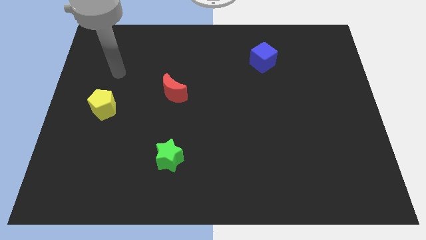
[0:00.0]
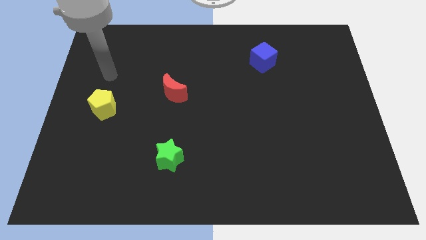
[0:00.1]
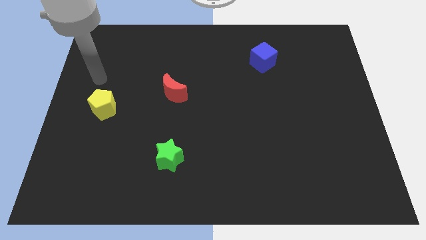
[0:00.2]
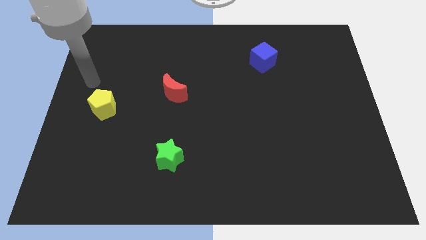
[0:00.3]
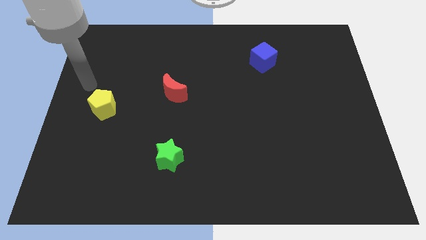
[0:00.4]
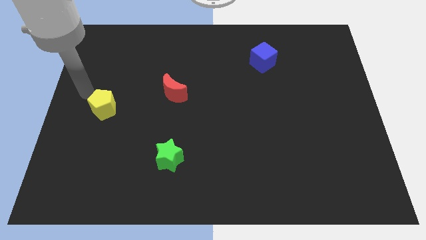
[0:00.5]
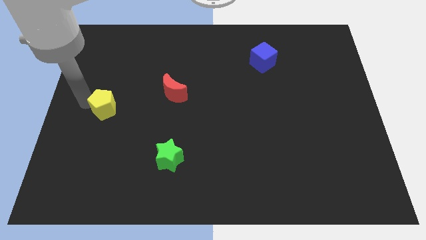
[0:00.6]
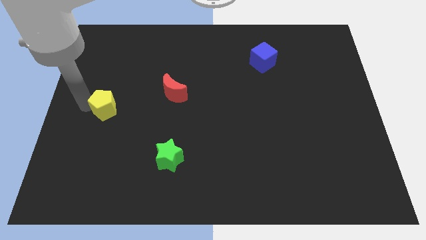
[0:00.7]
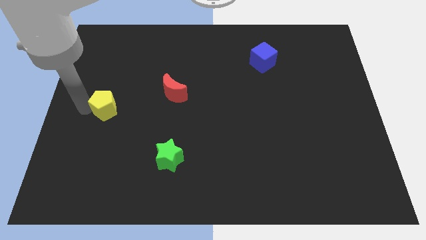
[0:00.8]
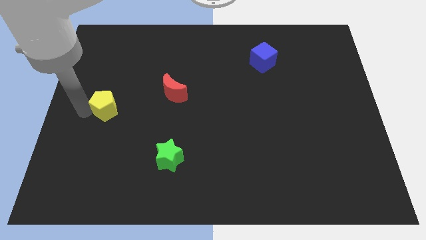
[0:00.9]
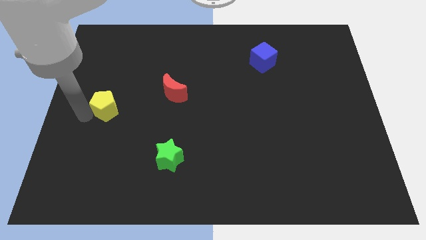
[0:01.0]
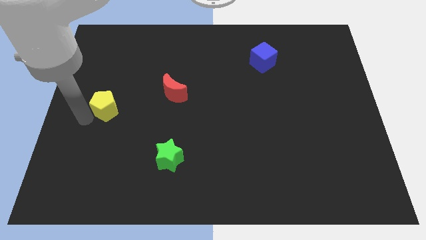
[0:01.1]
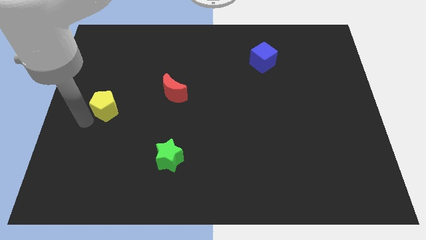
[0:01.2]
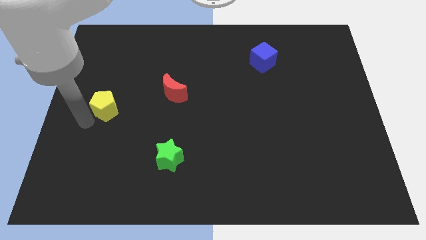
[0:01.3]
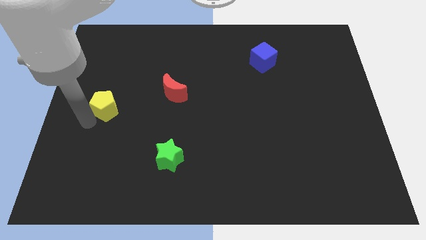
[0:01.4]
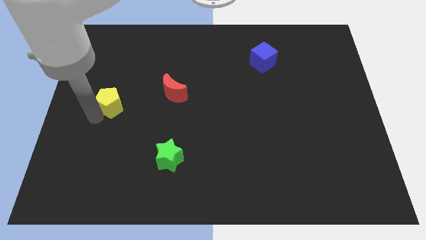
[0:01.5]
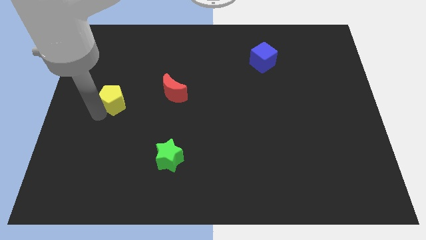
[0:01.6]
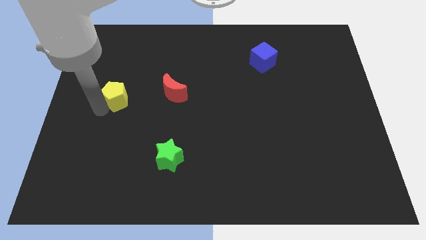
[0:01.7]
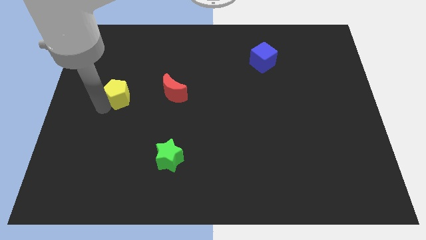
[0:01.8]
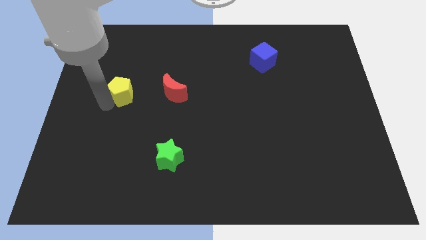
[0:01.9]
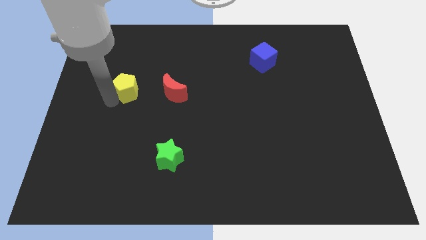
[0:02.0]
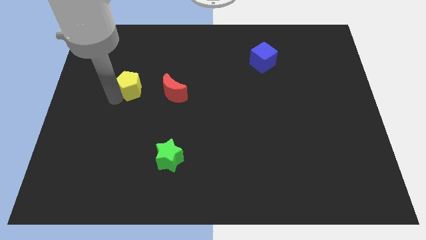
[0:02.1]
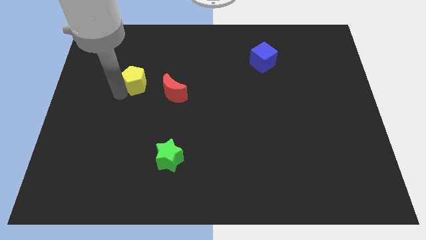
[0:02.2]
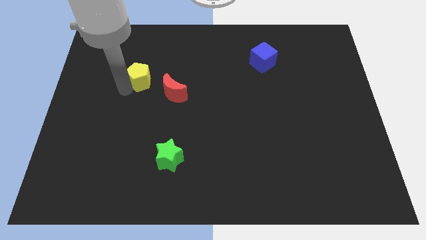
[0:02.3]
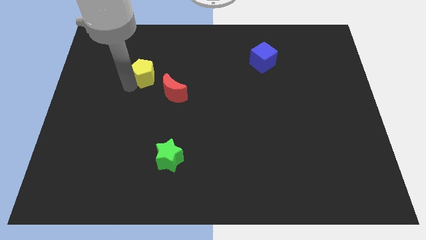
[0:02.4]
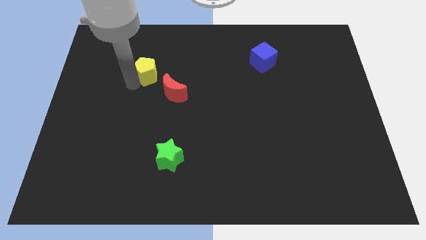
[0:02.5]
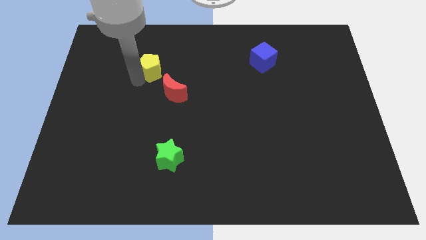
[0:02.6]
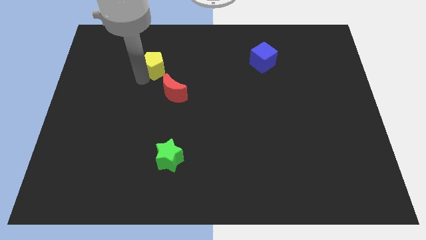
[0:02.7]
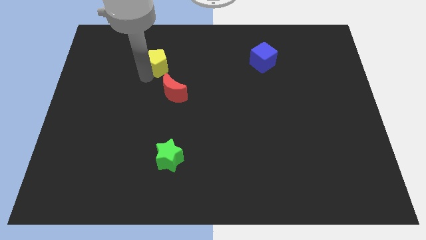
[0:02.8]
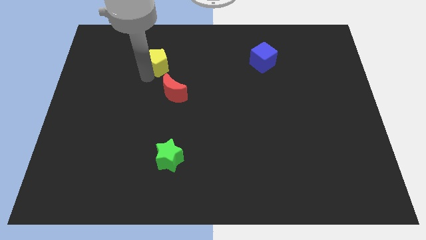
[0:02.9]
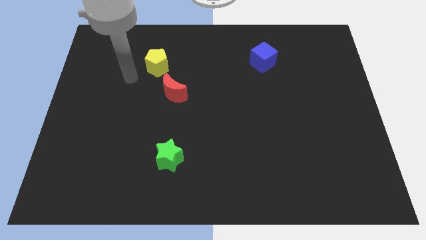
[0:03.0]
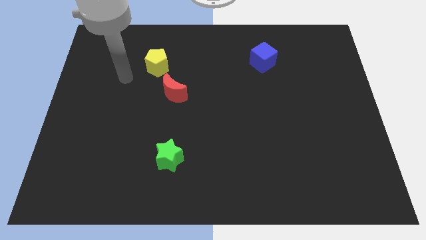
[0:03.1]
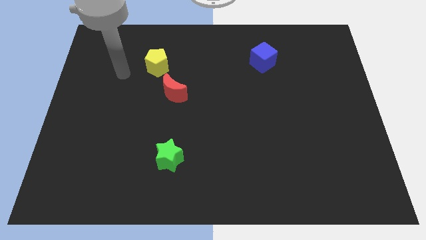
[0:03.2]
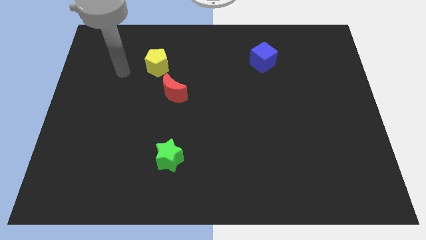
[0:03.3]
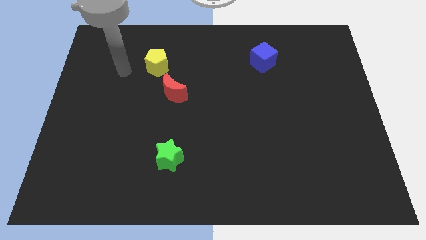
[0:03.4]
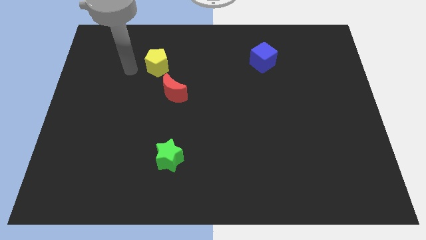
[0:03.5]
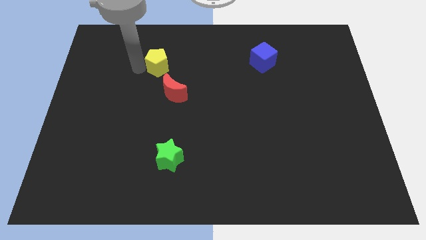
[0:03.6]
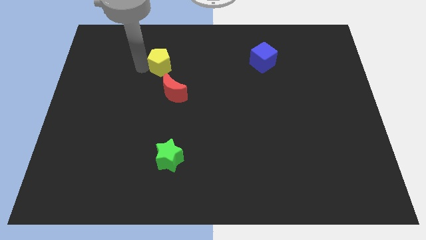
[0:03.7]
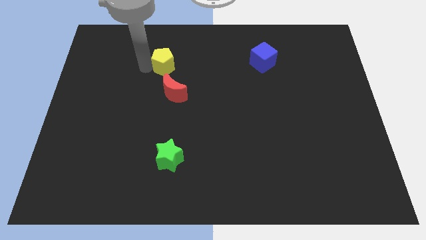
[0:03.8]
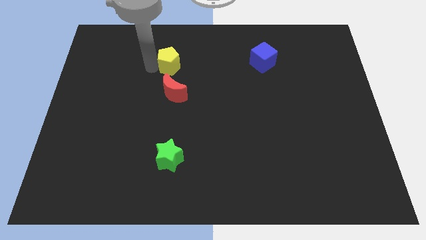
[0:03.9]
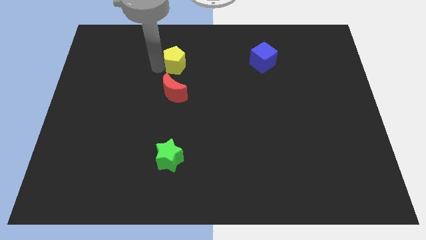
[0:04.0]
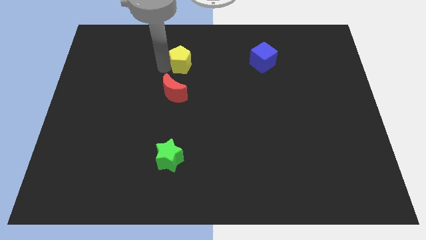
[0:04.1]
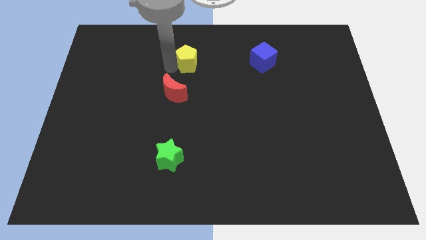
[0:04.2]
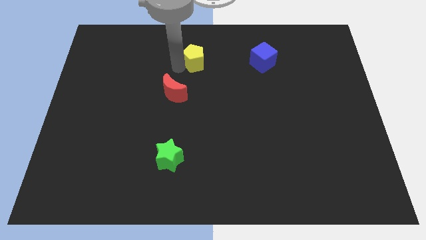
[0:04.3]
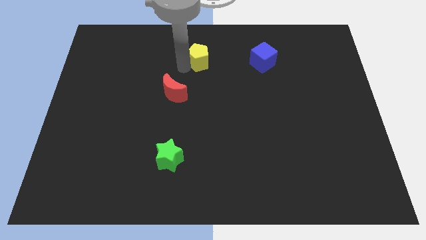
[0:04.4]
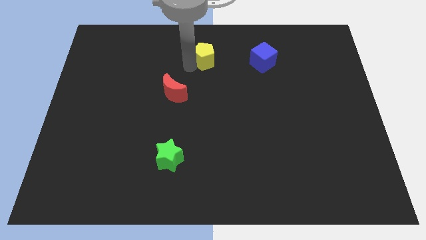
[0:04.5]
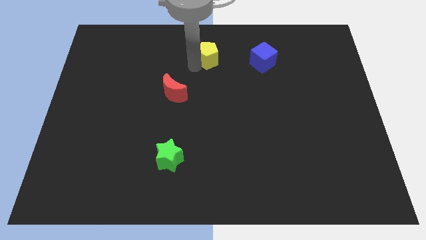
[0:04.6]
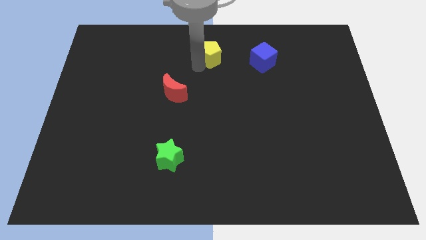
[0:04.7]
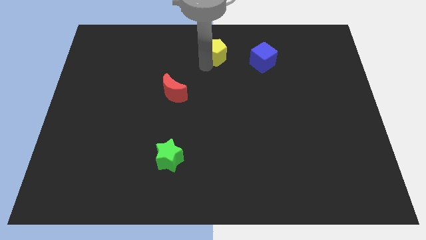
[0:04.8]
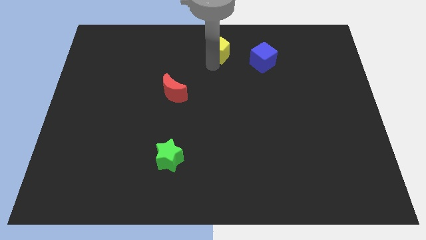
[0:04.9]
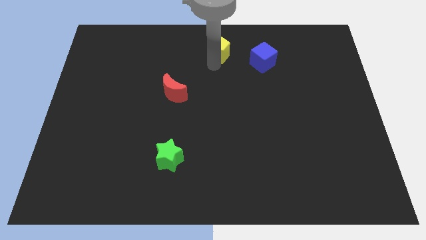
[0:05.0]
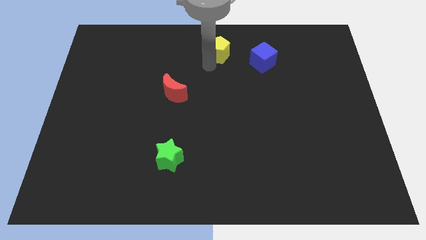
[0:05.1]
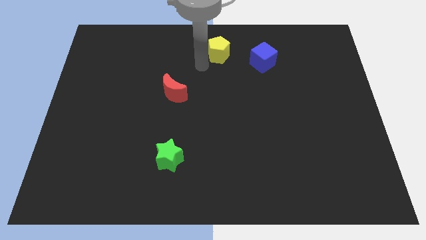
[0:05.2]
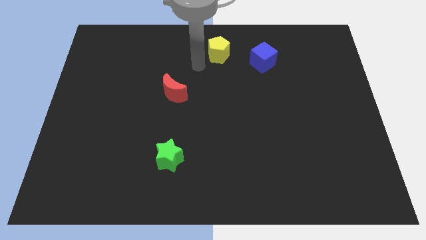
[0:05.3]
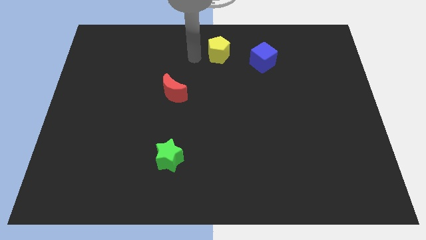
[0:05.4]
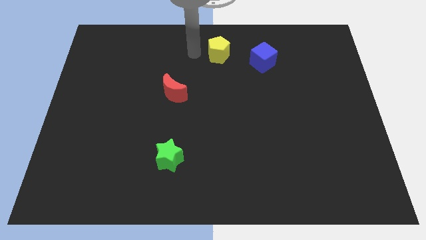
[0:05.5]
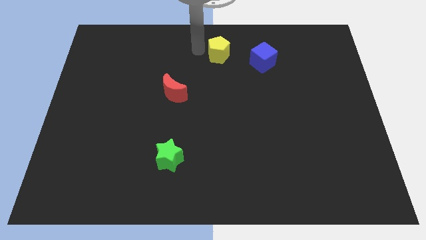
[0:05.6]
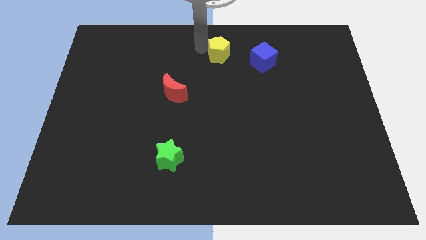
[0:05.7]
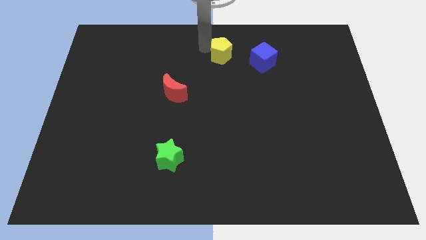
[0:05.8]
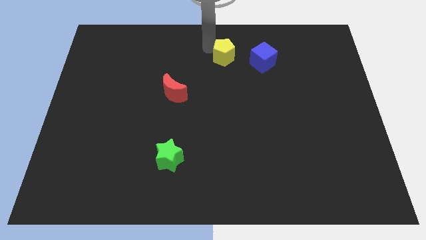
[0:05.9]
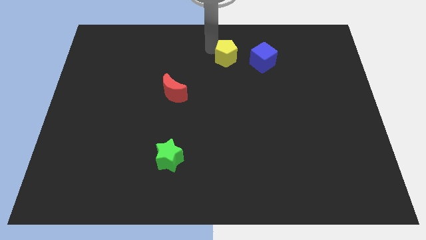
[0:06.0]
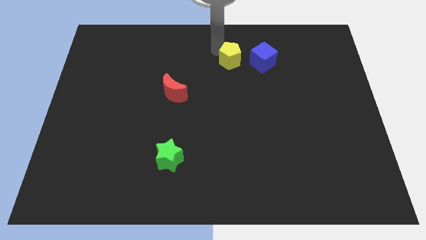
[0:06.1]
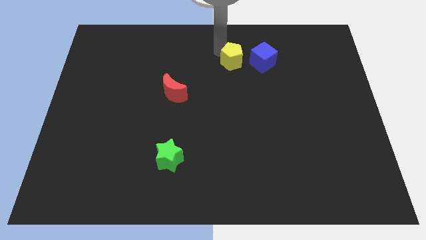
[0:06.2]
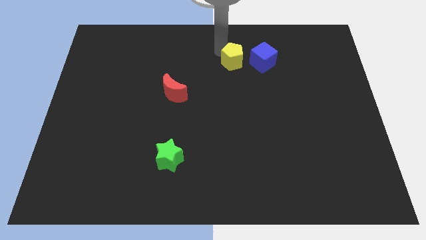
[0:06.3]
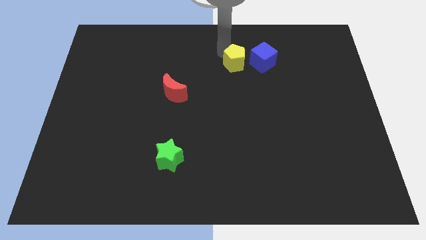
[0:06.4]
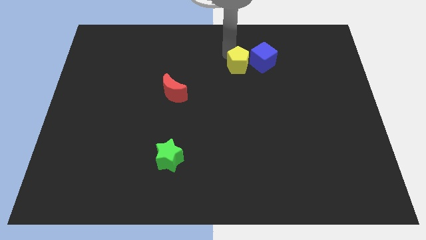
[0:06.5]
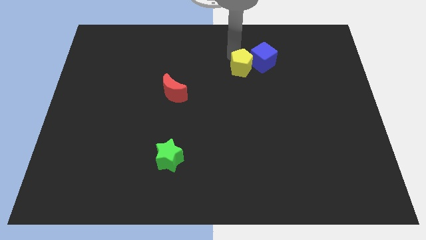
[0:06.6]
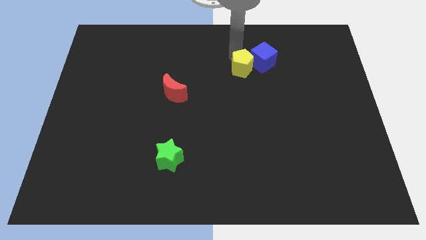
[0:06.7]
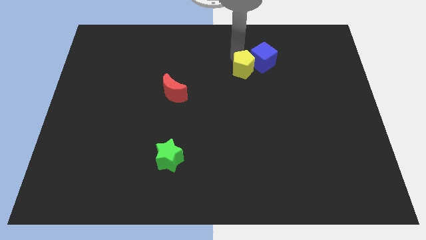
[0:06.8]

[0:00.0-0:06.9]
push the yellow block to the blue cube

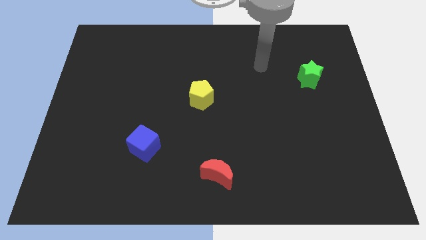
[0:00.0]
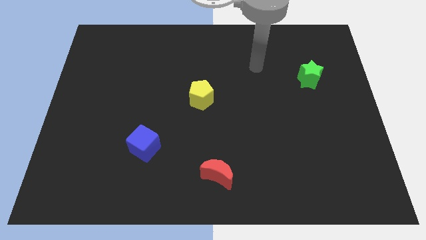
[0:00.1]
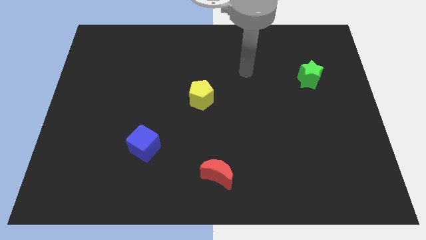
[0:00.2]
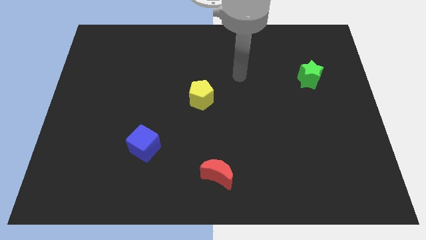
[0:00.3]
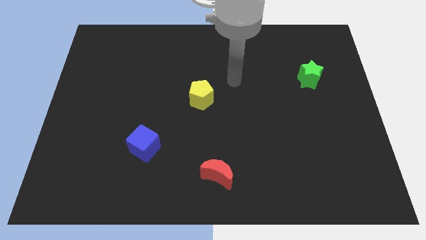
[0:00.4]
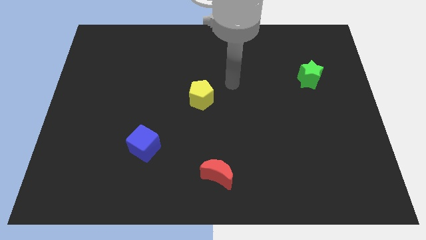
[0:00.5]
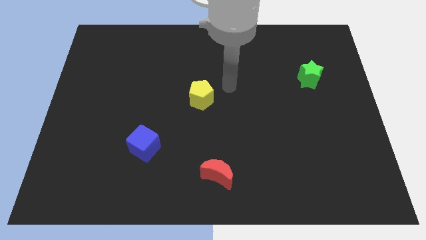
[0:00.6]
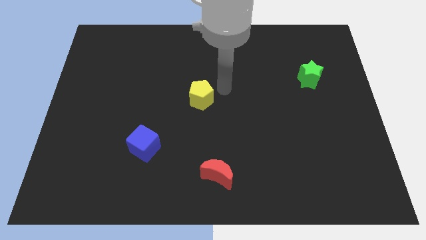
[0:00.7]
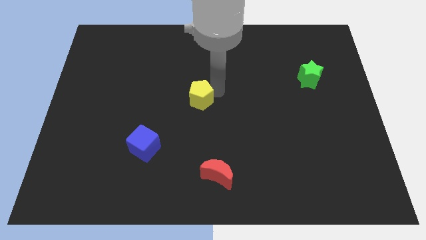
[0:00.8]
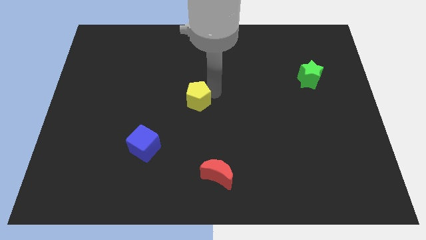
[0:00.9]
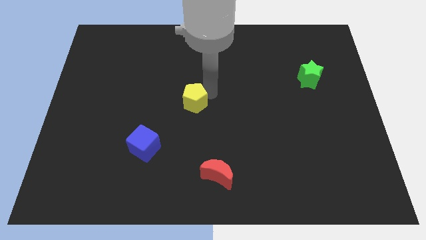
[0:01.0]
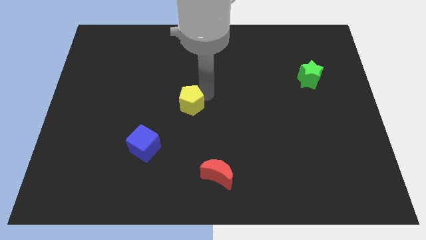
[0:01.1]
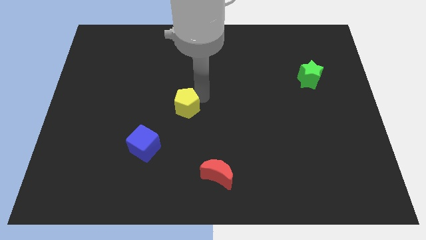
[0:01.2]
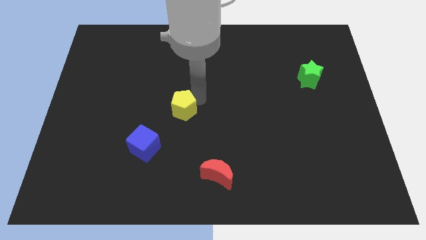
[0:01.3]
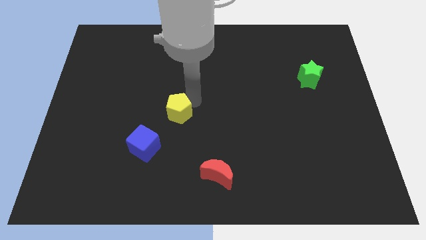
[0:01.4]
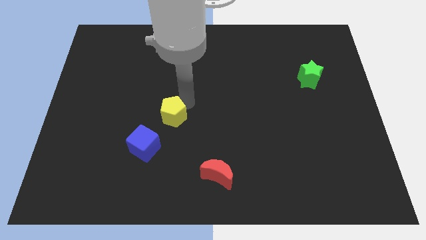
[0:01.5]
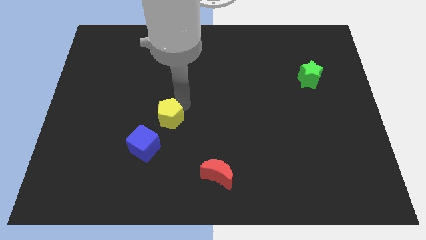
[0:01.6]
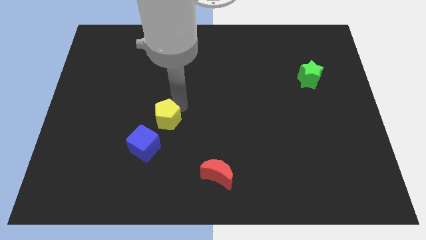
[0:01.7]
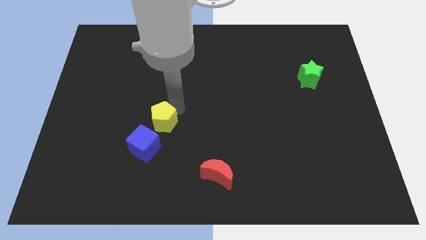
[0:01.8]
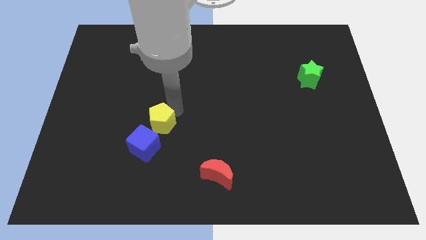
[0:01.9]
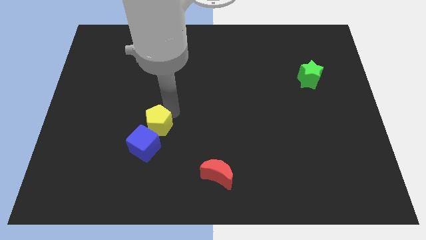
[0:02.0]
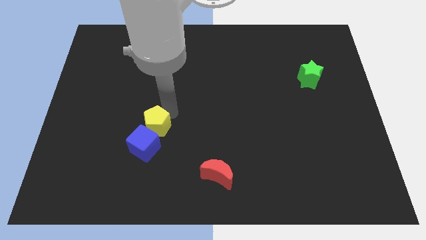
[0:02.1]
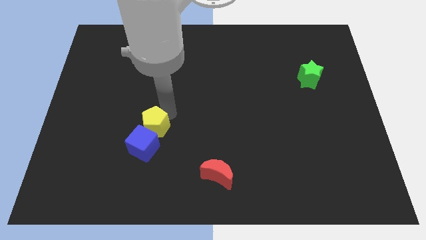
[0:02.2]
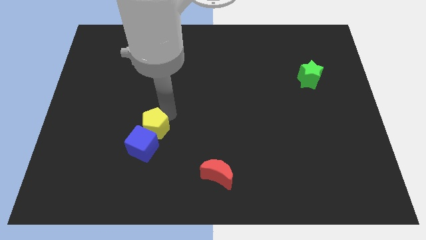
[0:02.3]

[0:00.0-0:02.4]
slide the yellow pentagon towards the blue cube
